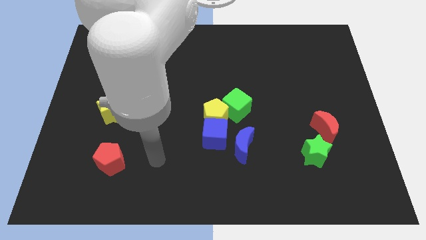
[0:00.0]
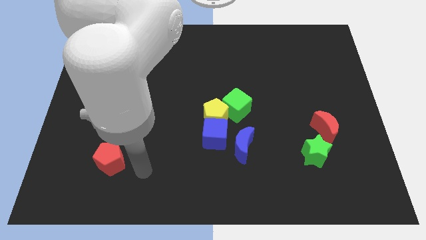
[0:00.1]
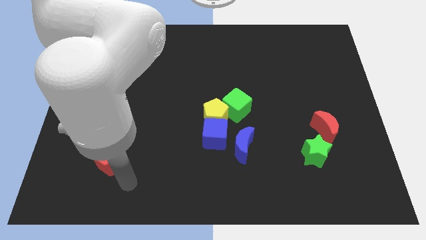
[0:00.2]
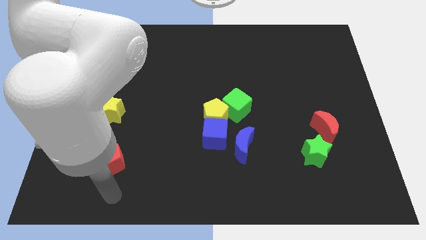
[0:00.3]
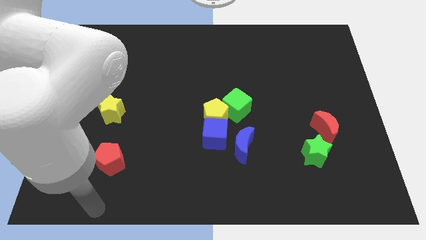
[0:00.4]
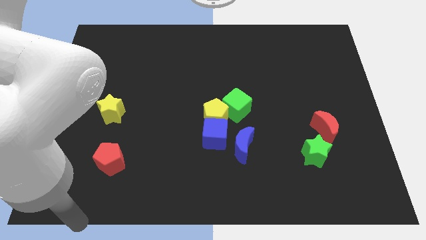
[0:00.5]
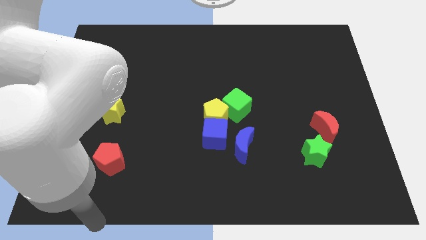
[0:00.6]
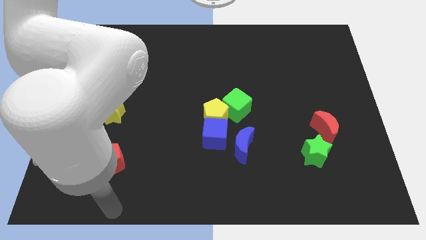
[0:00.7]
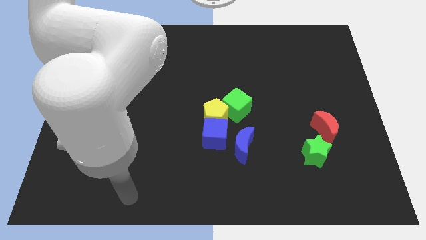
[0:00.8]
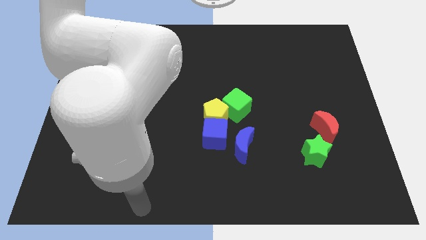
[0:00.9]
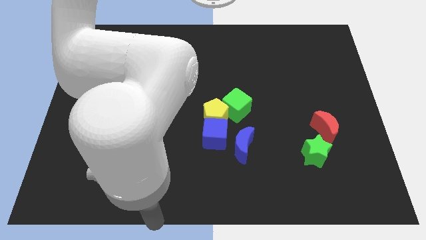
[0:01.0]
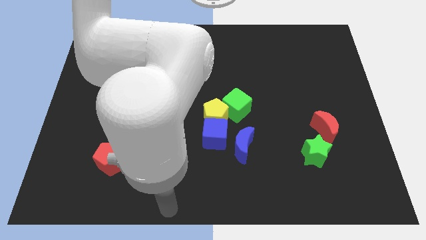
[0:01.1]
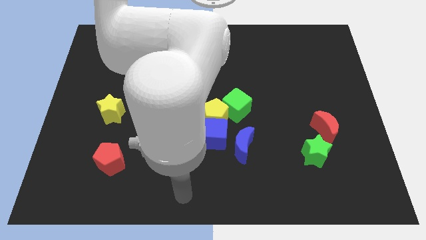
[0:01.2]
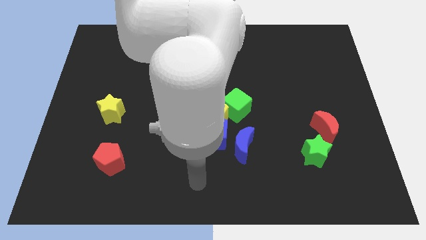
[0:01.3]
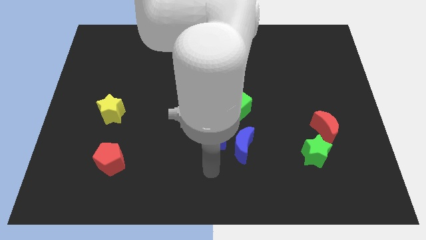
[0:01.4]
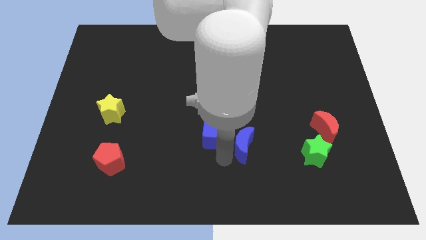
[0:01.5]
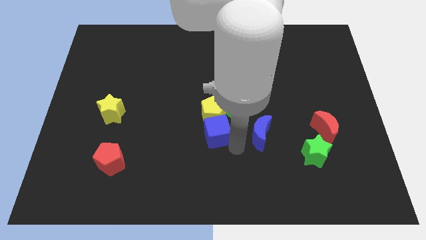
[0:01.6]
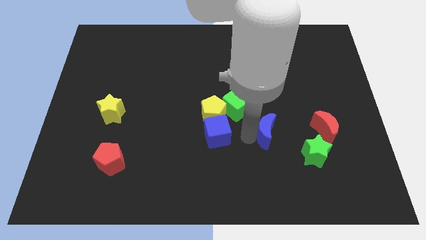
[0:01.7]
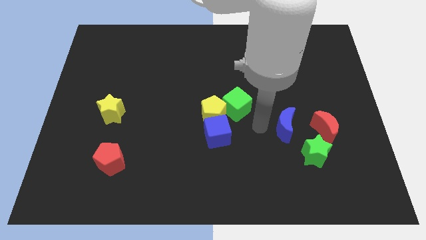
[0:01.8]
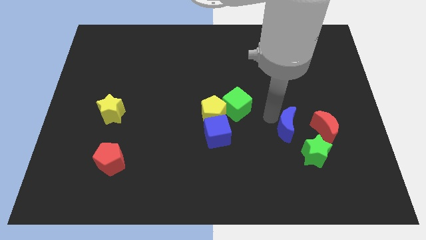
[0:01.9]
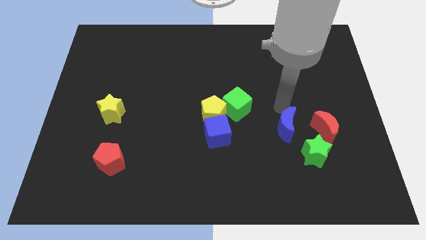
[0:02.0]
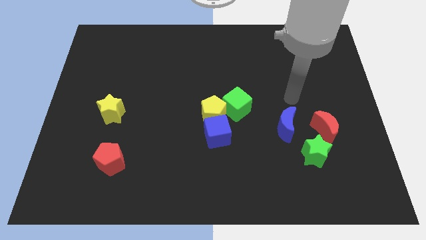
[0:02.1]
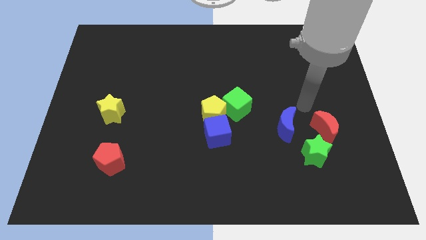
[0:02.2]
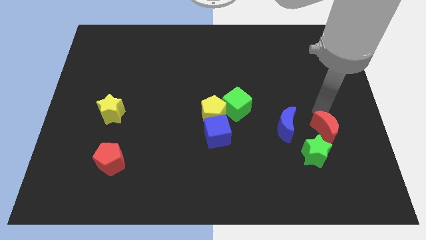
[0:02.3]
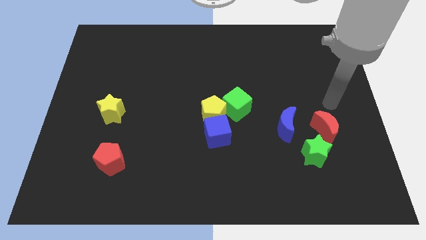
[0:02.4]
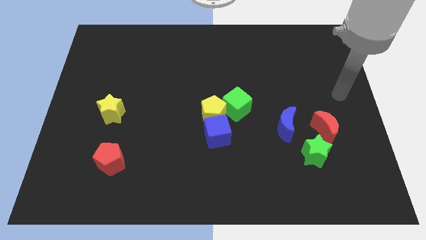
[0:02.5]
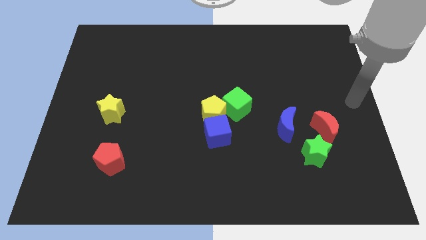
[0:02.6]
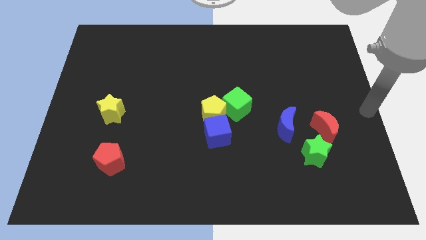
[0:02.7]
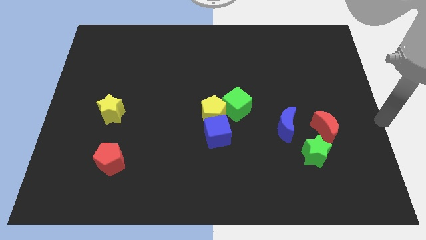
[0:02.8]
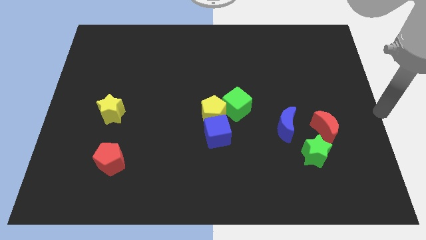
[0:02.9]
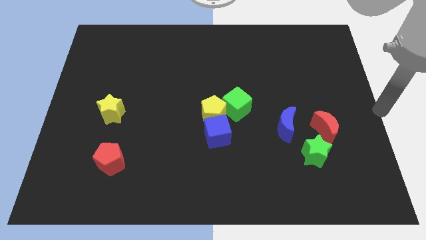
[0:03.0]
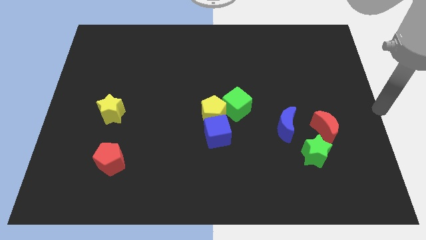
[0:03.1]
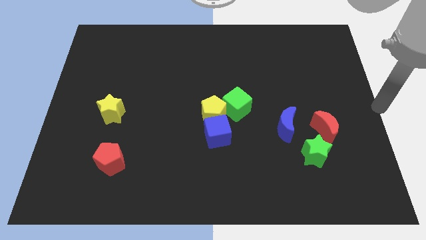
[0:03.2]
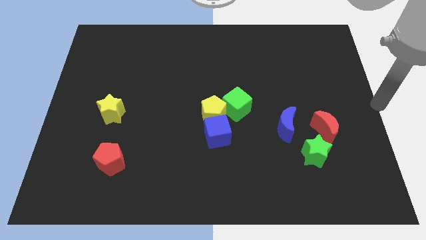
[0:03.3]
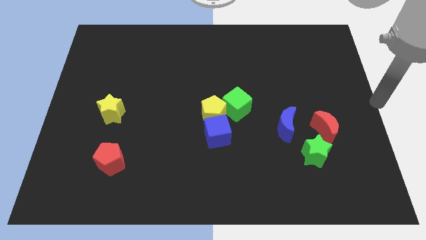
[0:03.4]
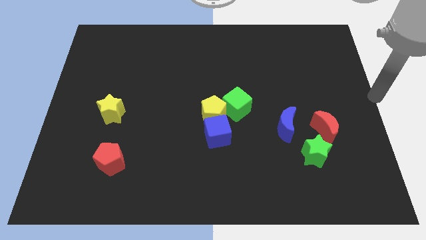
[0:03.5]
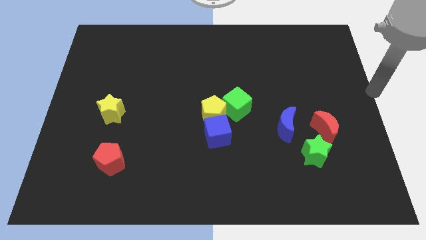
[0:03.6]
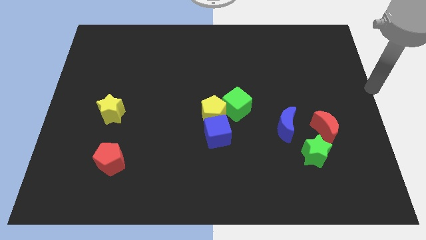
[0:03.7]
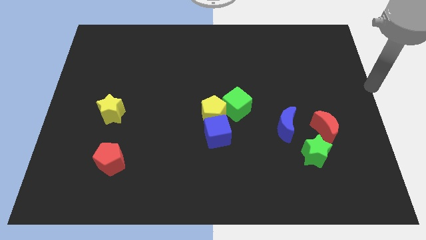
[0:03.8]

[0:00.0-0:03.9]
push blue crescent slightly towards right

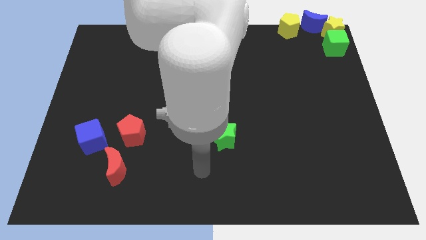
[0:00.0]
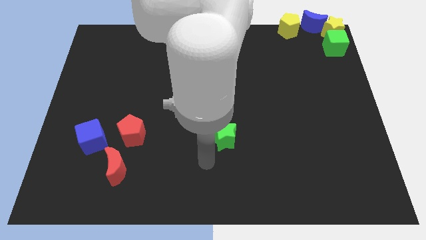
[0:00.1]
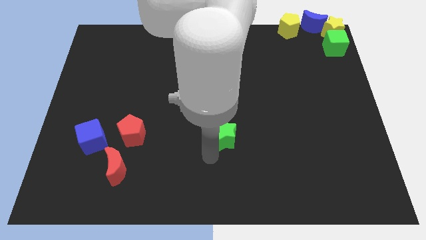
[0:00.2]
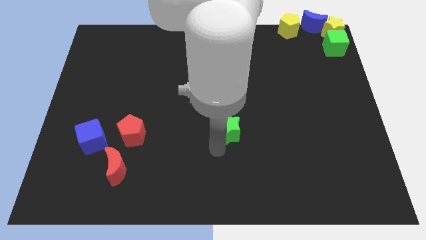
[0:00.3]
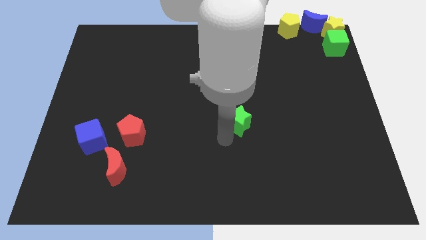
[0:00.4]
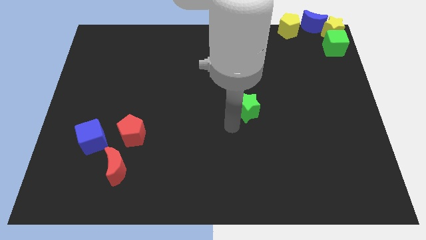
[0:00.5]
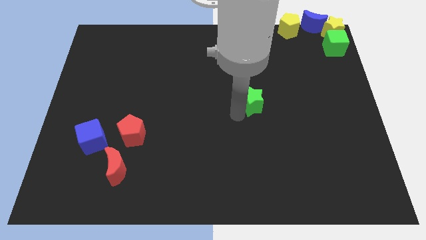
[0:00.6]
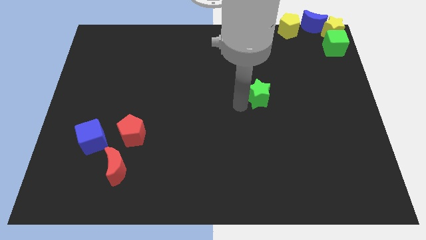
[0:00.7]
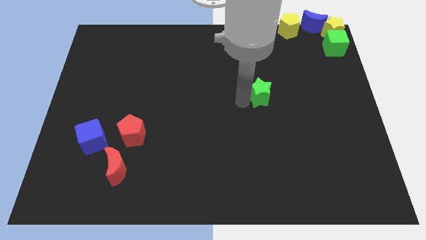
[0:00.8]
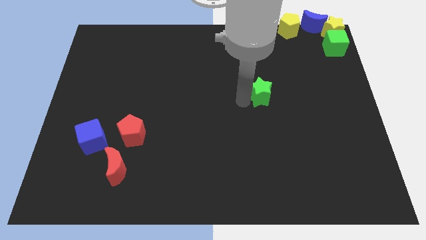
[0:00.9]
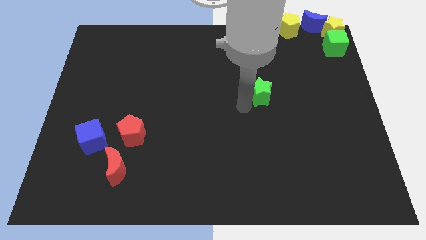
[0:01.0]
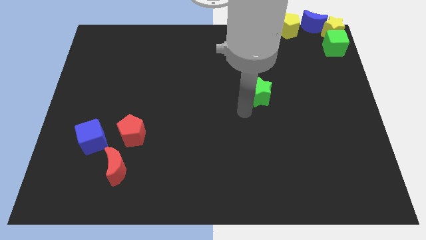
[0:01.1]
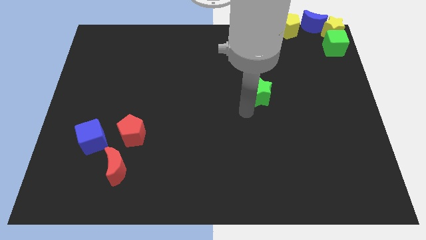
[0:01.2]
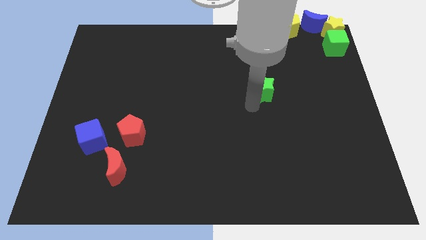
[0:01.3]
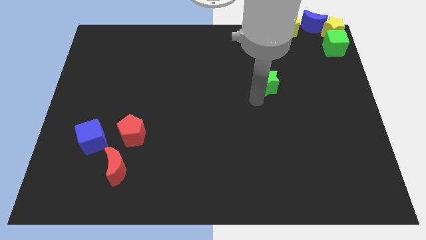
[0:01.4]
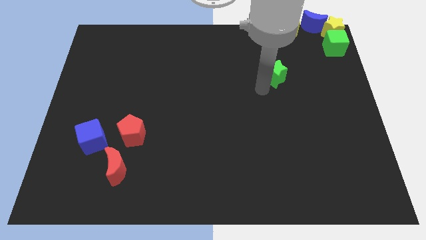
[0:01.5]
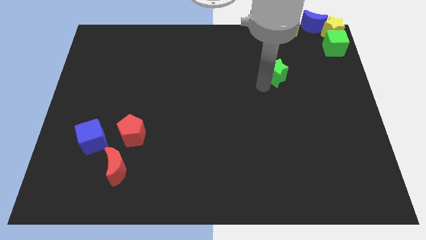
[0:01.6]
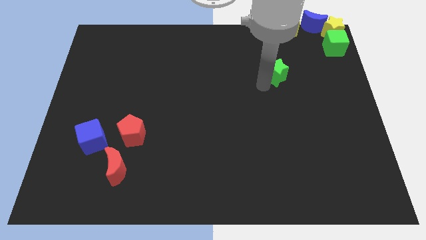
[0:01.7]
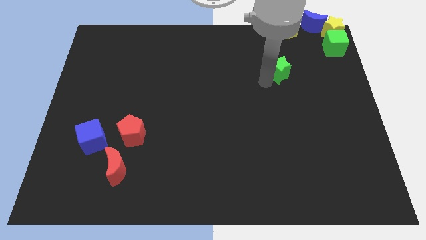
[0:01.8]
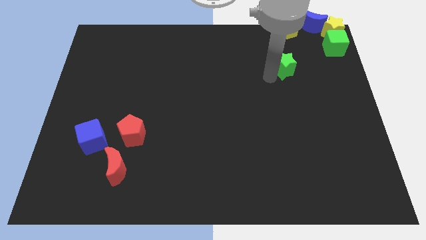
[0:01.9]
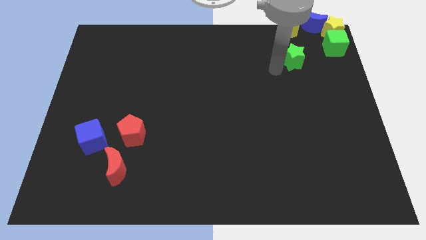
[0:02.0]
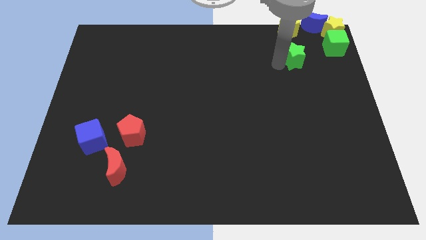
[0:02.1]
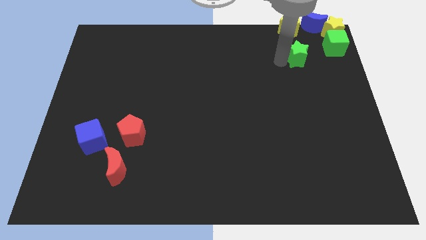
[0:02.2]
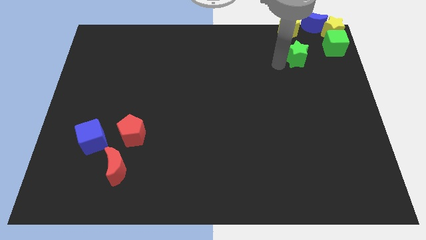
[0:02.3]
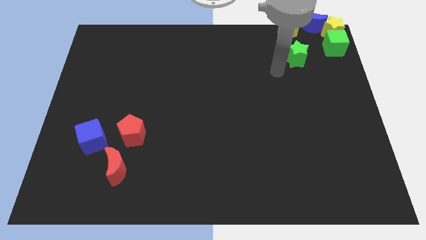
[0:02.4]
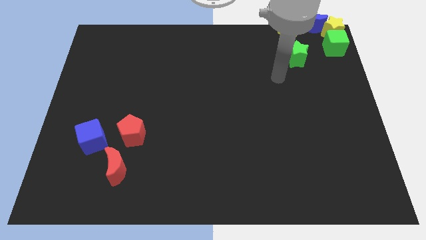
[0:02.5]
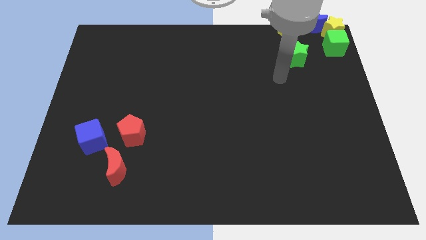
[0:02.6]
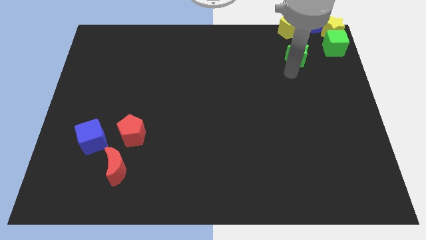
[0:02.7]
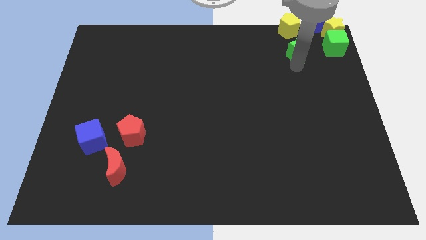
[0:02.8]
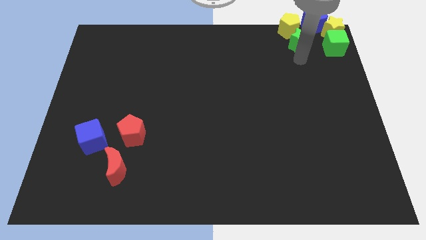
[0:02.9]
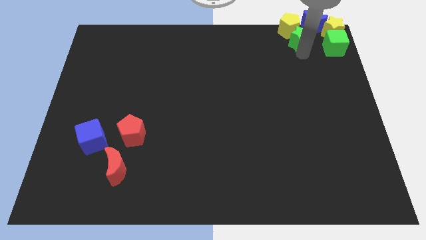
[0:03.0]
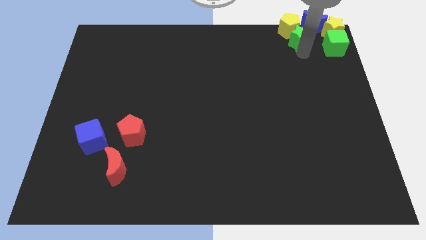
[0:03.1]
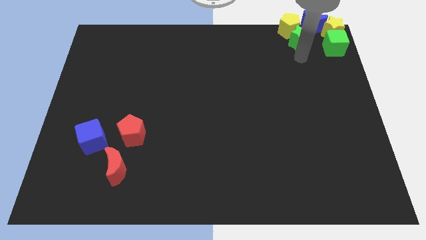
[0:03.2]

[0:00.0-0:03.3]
move green star left beside the green cube

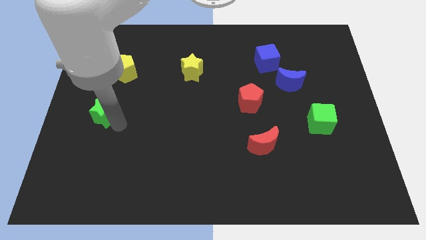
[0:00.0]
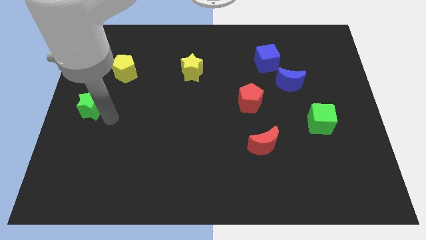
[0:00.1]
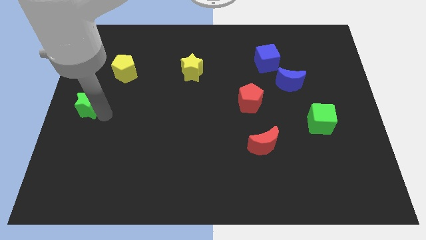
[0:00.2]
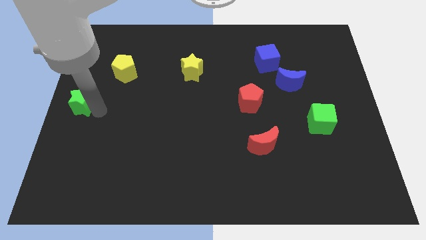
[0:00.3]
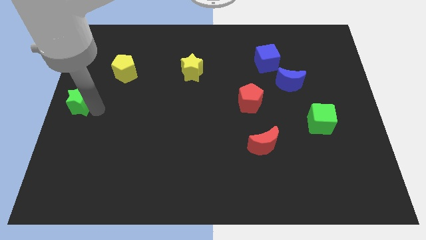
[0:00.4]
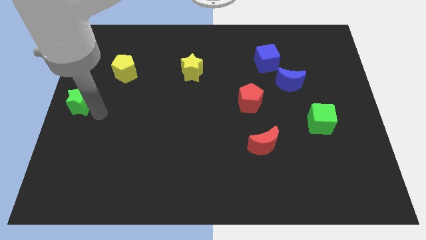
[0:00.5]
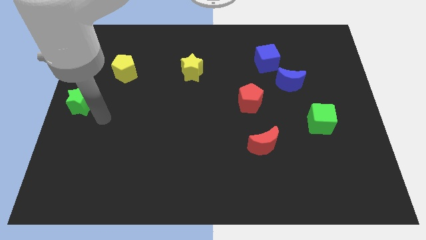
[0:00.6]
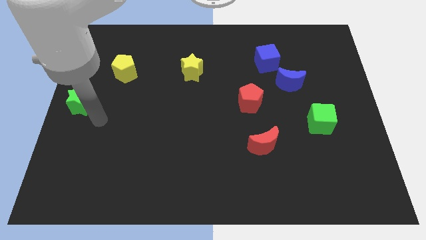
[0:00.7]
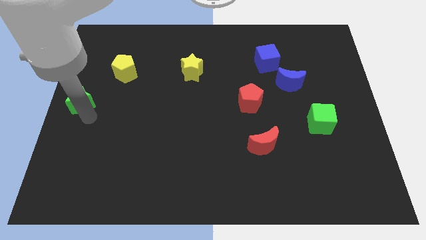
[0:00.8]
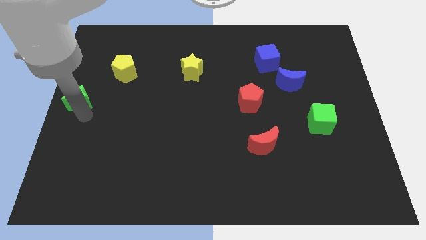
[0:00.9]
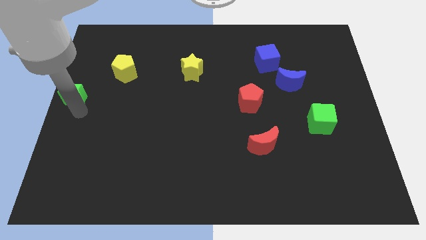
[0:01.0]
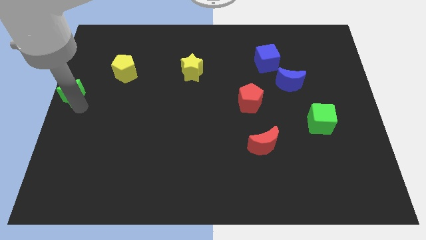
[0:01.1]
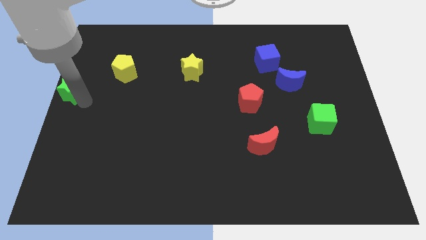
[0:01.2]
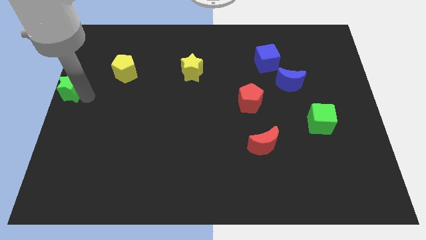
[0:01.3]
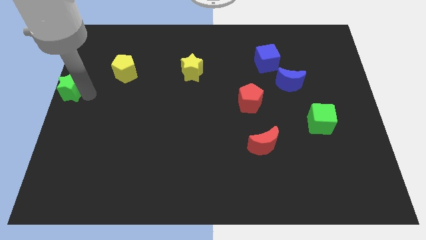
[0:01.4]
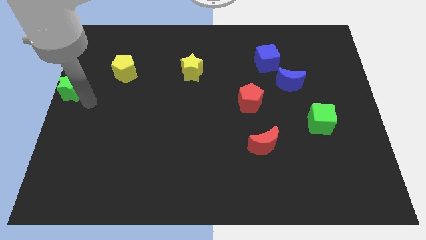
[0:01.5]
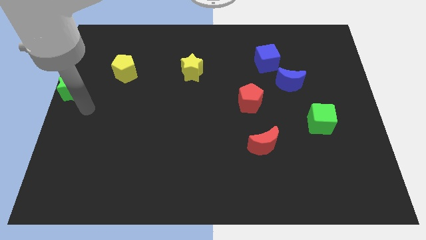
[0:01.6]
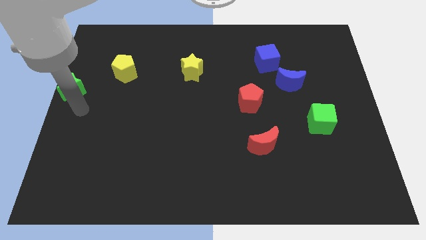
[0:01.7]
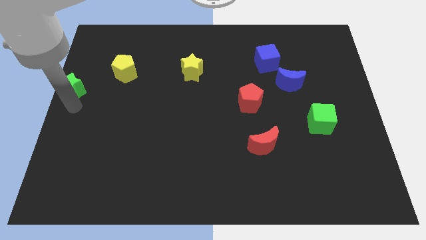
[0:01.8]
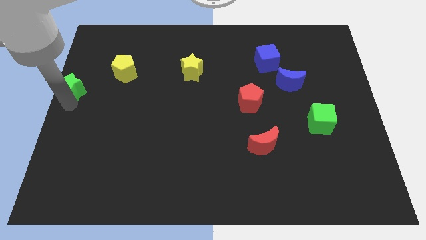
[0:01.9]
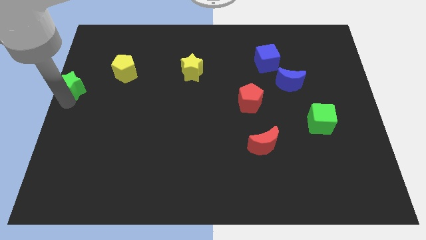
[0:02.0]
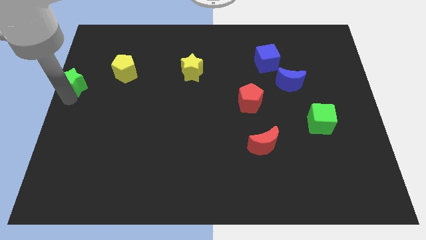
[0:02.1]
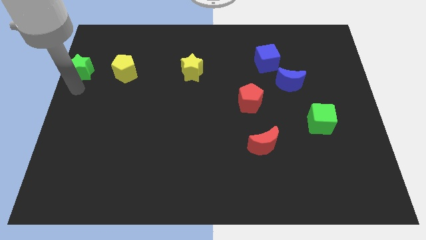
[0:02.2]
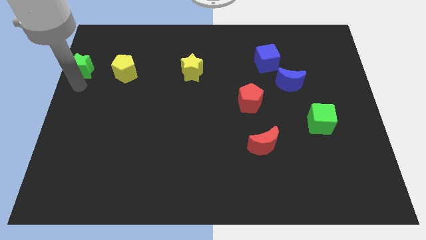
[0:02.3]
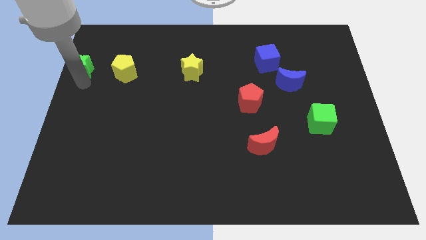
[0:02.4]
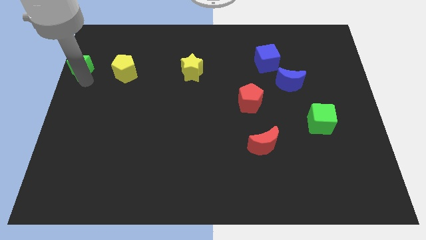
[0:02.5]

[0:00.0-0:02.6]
move the green star to the left of the yellow pentagon
